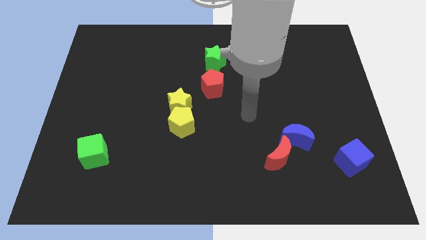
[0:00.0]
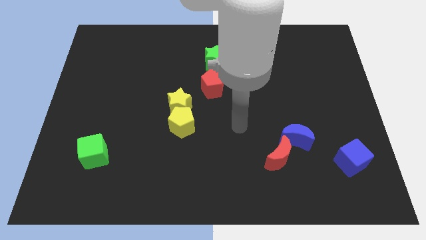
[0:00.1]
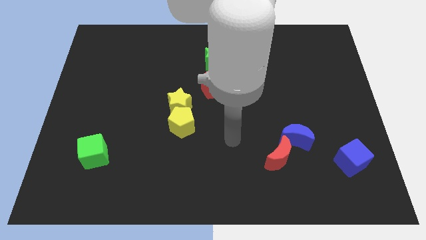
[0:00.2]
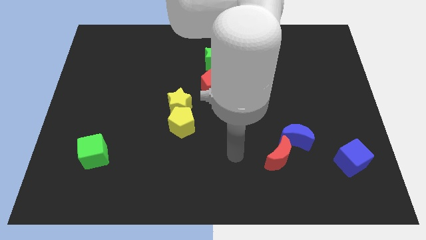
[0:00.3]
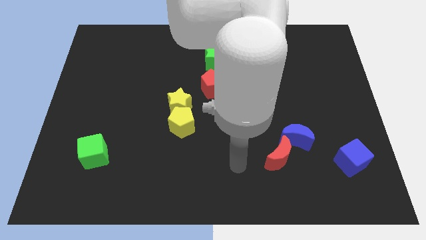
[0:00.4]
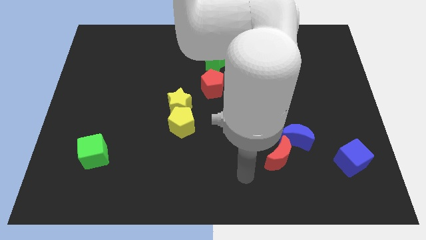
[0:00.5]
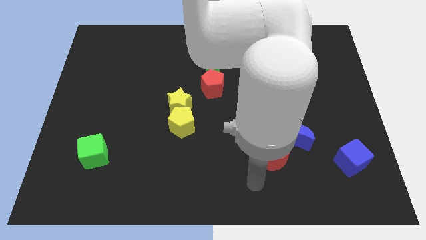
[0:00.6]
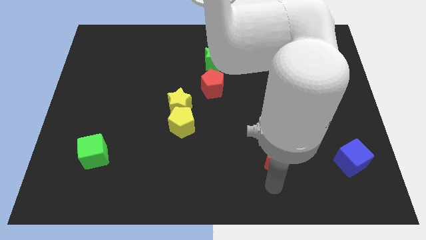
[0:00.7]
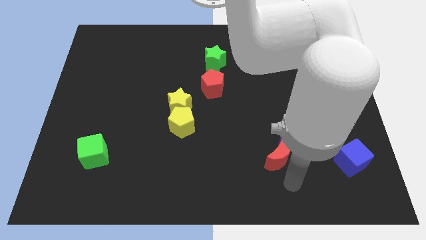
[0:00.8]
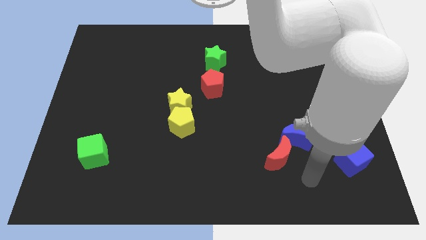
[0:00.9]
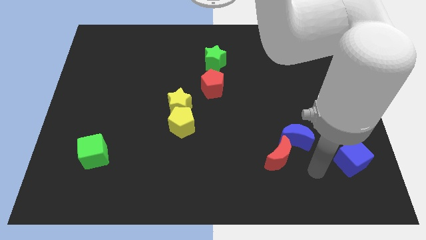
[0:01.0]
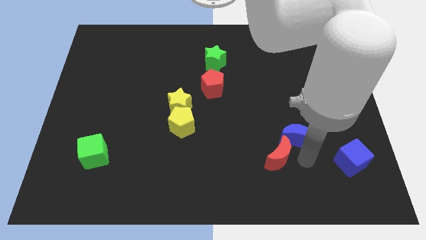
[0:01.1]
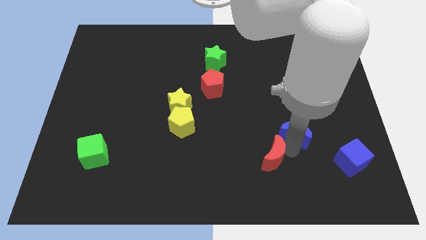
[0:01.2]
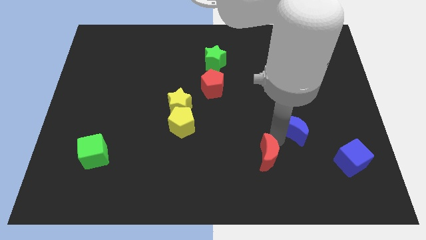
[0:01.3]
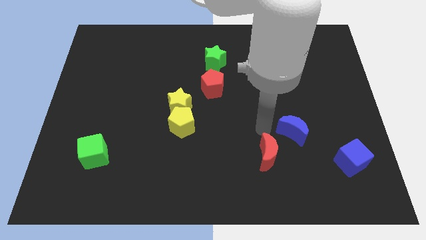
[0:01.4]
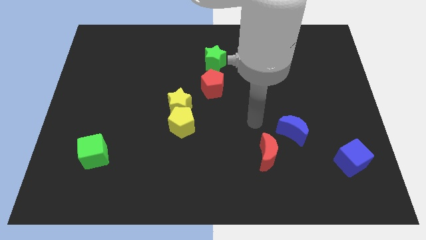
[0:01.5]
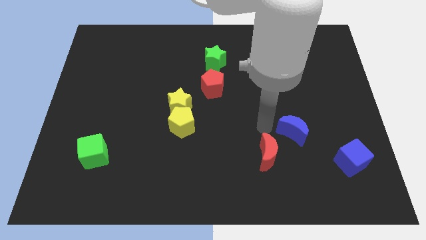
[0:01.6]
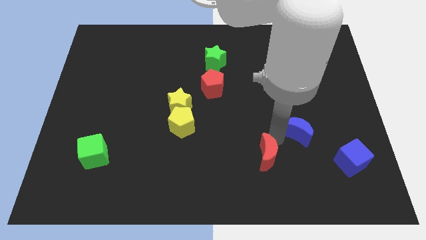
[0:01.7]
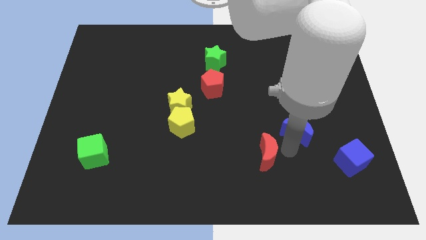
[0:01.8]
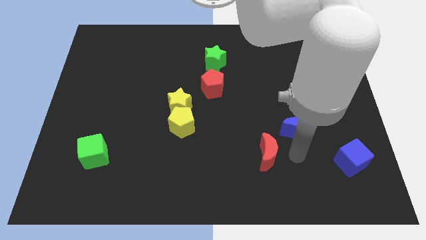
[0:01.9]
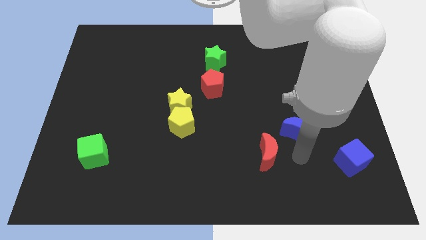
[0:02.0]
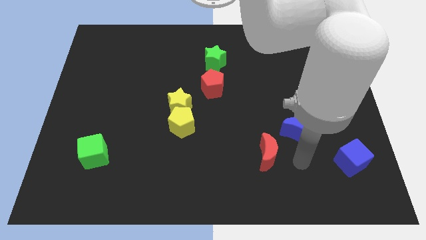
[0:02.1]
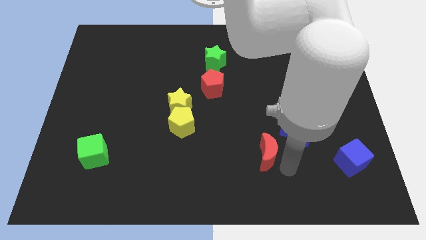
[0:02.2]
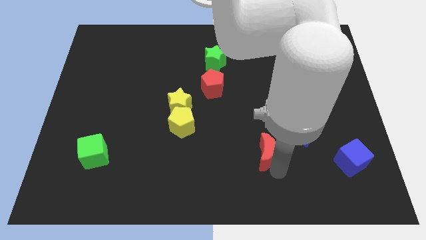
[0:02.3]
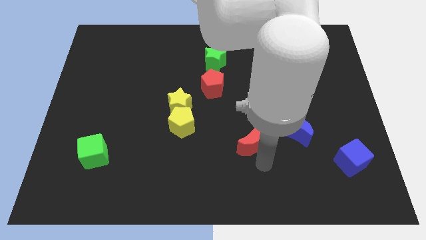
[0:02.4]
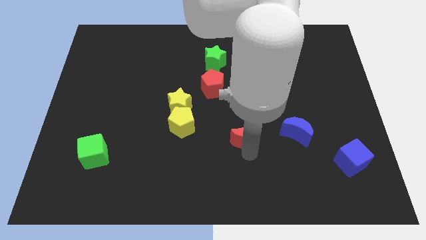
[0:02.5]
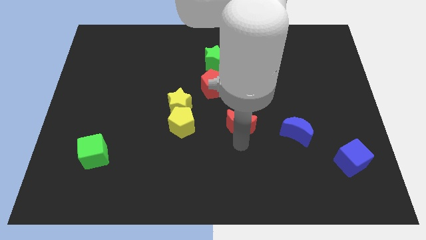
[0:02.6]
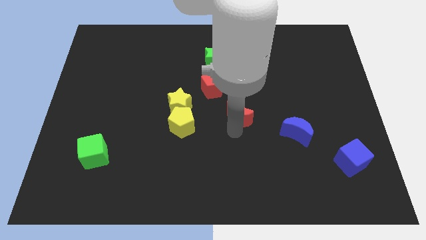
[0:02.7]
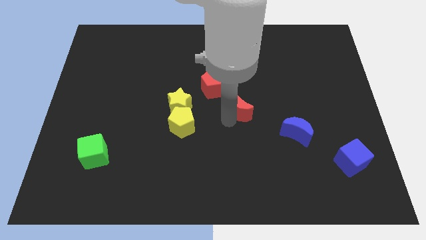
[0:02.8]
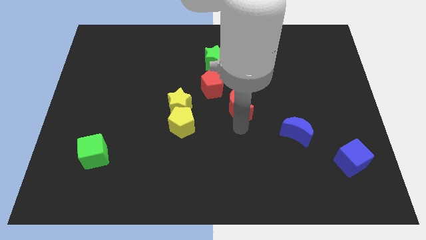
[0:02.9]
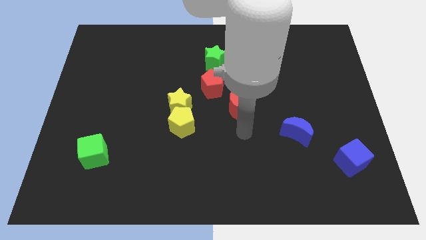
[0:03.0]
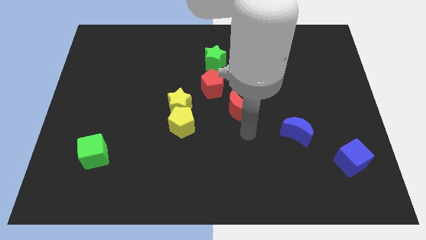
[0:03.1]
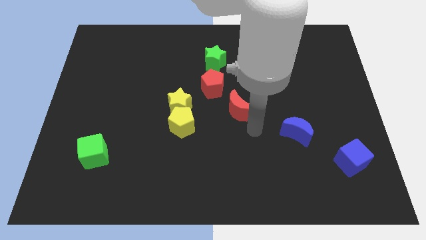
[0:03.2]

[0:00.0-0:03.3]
place the red moon in between the red pentagon and blue moon

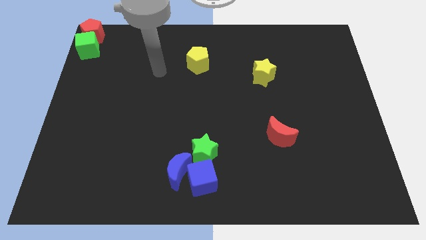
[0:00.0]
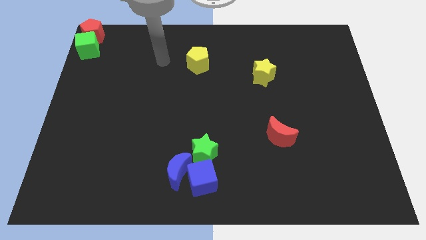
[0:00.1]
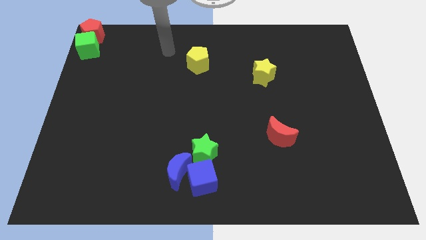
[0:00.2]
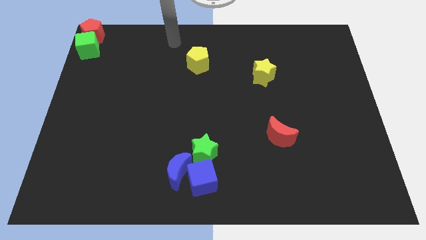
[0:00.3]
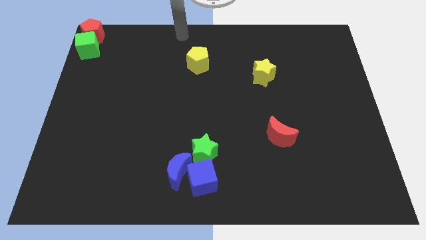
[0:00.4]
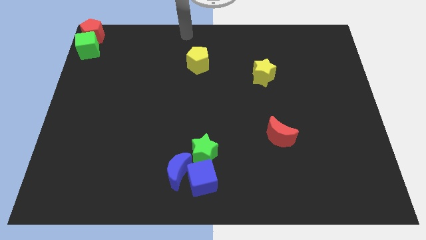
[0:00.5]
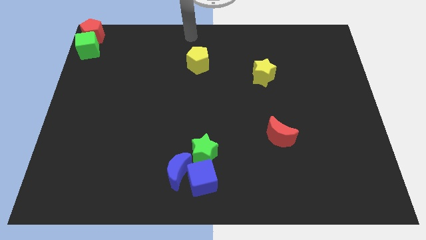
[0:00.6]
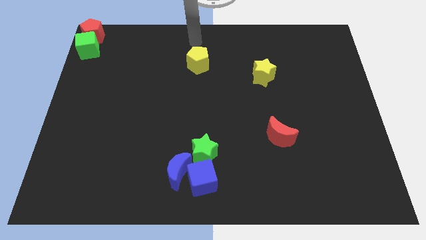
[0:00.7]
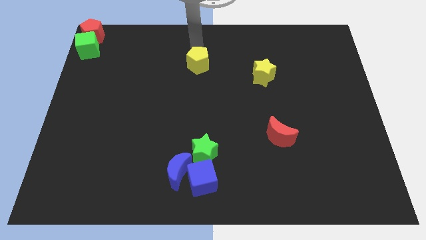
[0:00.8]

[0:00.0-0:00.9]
point your arm at the top of yellow pentagon

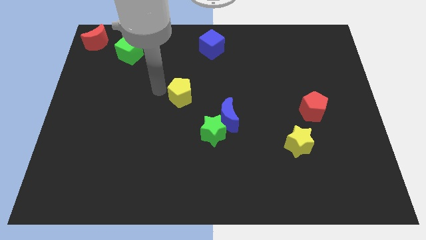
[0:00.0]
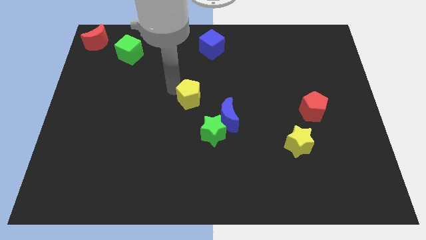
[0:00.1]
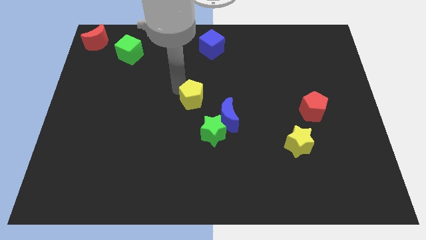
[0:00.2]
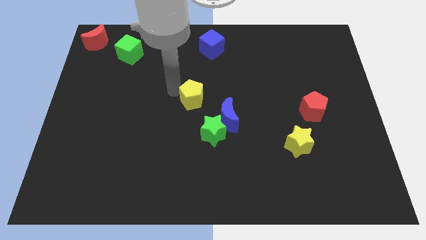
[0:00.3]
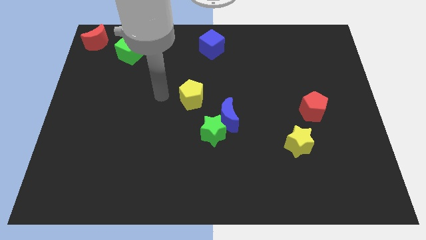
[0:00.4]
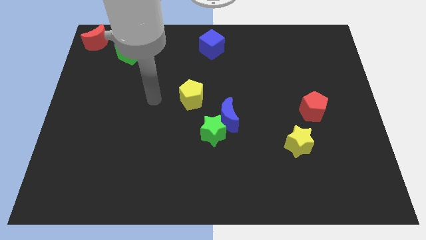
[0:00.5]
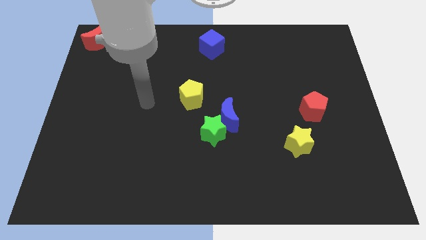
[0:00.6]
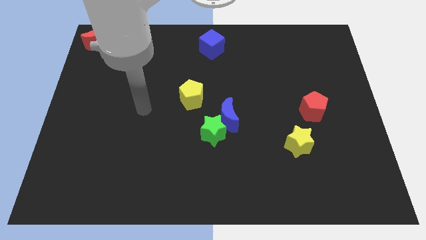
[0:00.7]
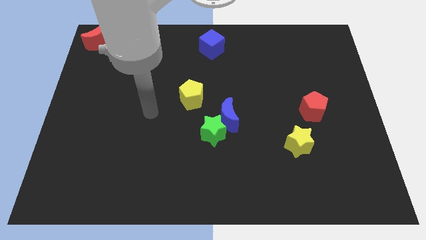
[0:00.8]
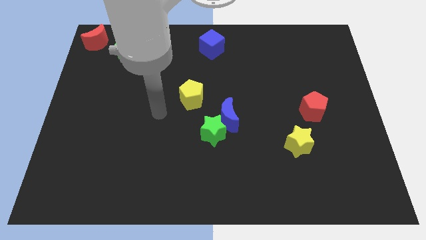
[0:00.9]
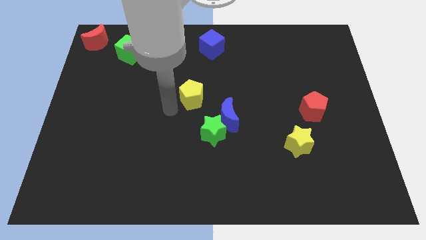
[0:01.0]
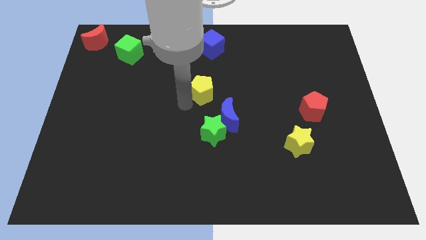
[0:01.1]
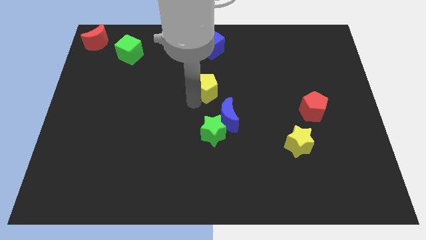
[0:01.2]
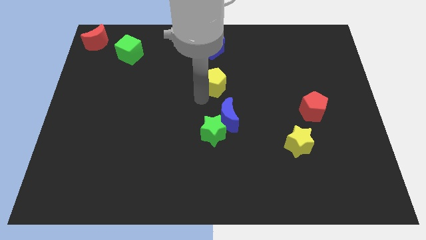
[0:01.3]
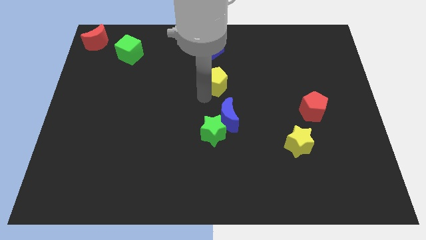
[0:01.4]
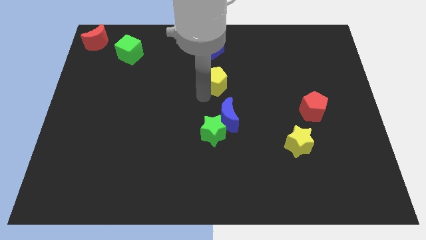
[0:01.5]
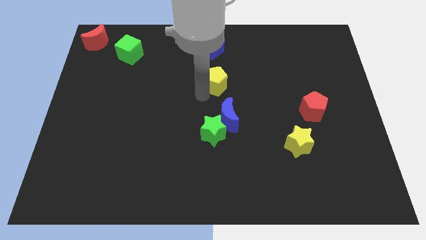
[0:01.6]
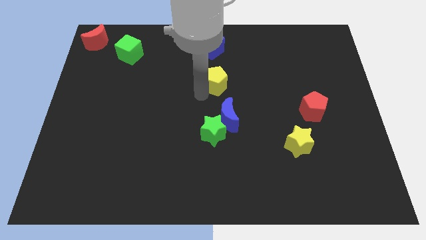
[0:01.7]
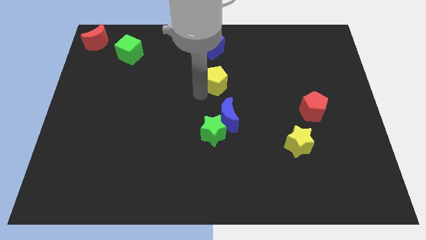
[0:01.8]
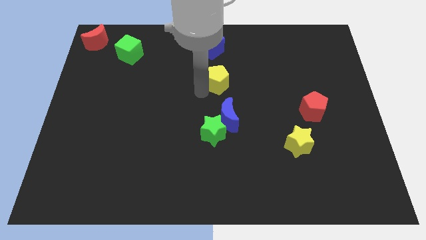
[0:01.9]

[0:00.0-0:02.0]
move the yellow pentagon to the bottom of the blue cube

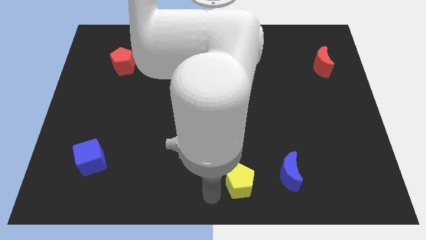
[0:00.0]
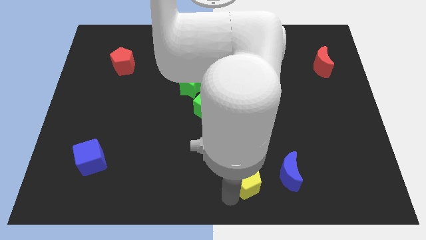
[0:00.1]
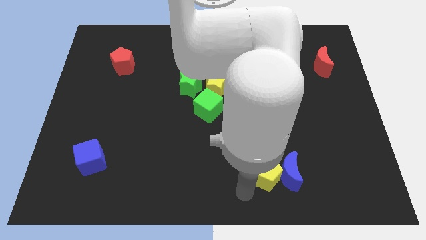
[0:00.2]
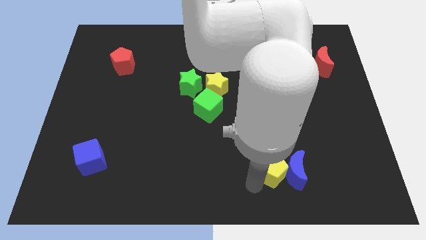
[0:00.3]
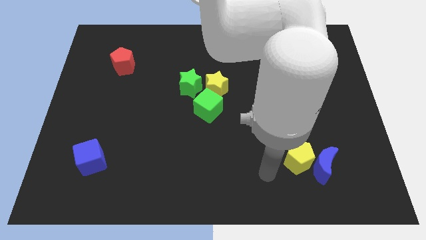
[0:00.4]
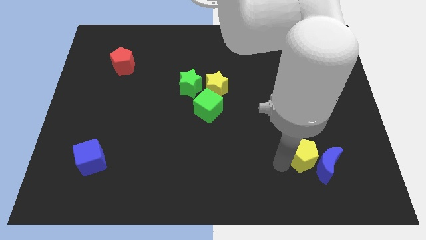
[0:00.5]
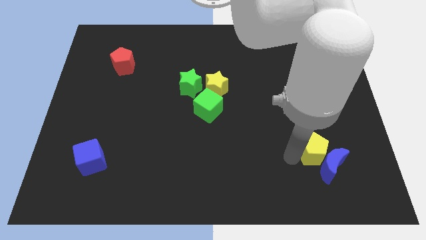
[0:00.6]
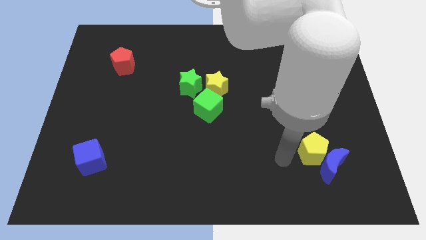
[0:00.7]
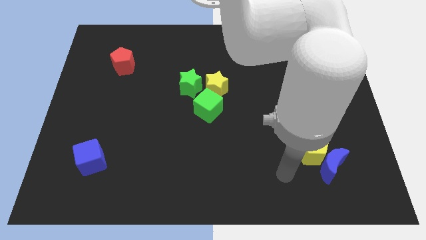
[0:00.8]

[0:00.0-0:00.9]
push the yellow pentagon towards the blue crescent

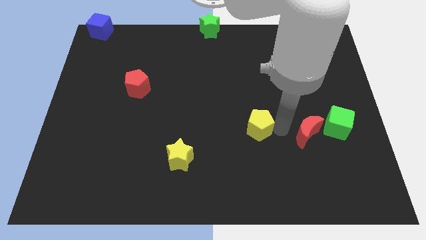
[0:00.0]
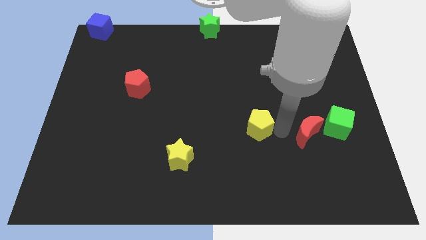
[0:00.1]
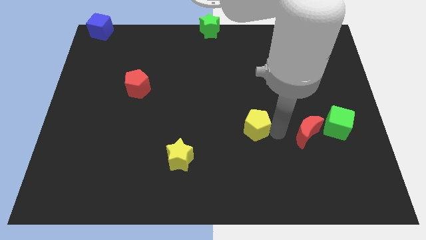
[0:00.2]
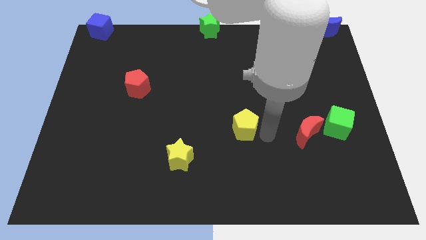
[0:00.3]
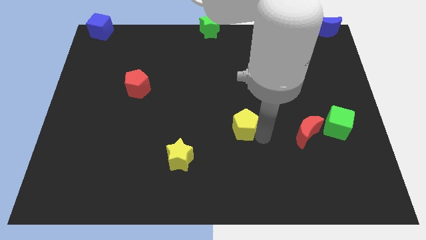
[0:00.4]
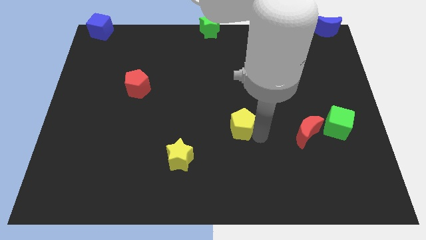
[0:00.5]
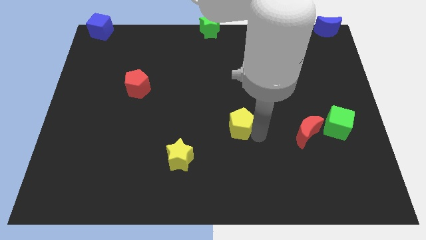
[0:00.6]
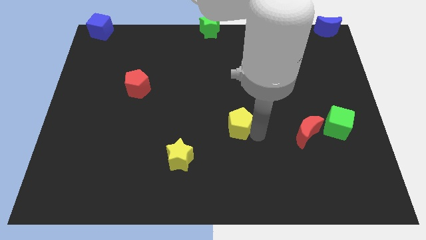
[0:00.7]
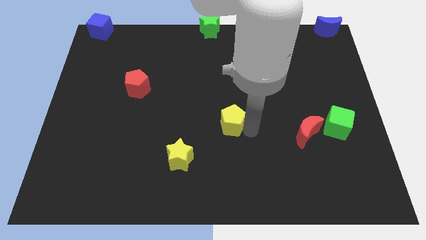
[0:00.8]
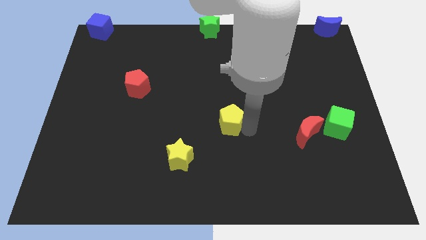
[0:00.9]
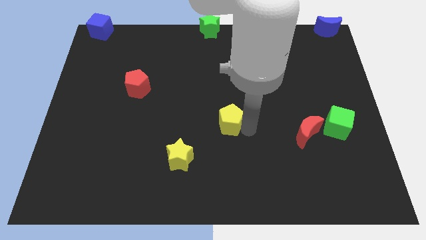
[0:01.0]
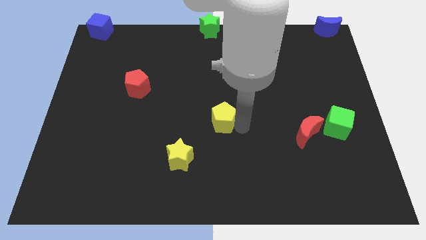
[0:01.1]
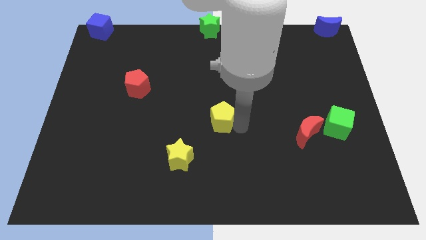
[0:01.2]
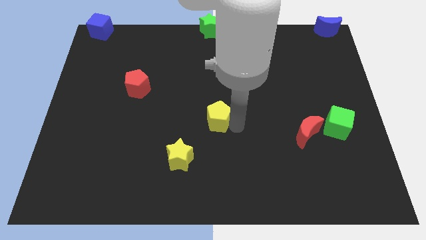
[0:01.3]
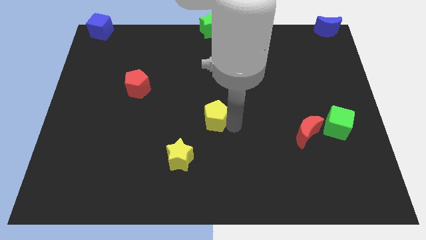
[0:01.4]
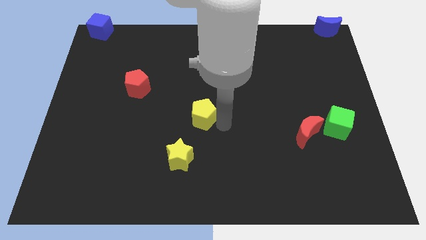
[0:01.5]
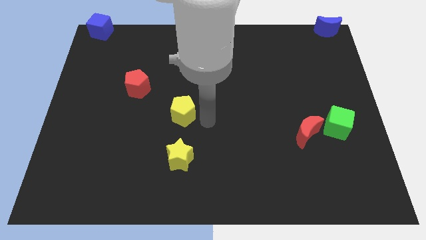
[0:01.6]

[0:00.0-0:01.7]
push yellow pentagon above yellow star

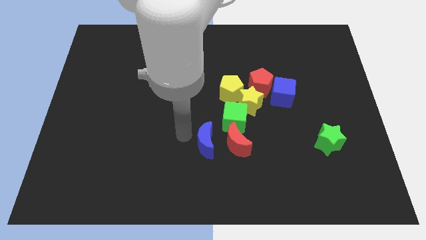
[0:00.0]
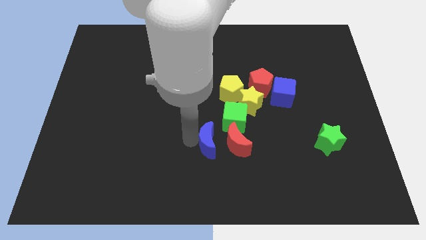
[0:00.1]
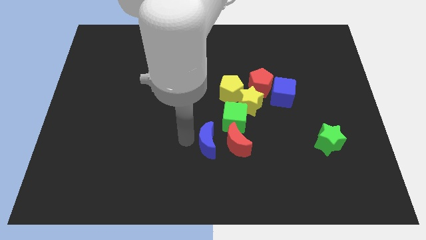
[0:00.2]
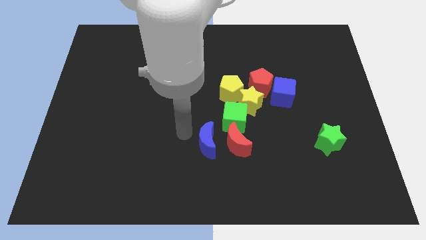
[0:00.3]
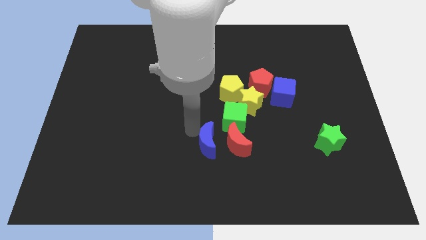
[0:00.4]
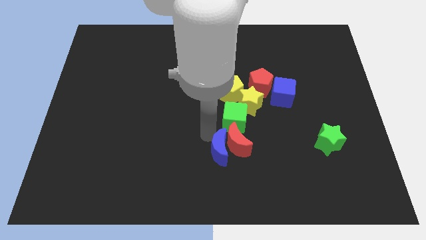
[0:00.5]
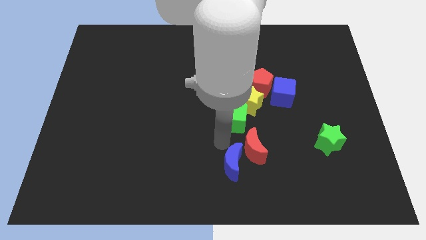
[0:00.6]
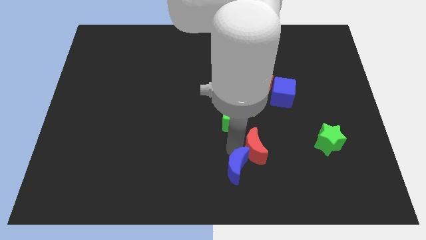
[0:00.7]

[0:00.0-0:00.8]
push blue crescent in red moon
